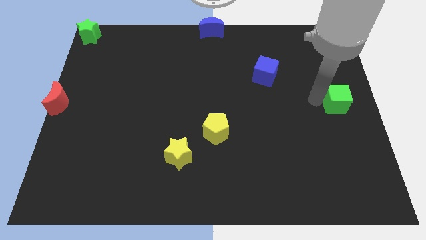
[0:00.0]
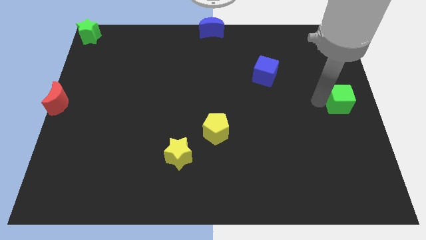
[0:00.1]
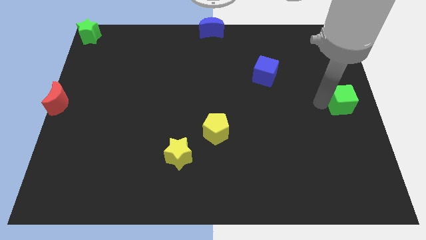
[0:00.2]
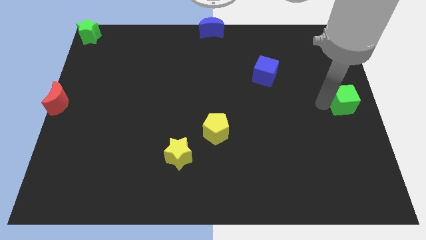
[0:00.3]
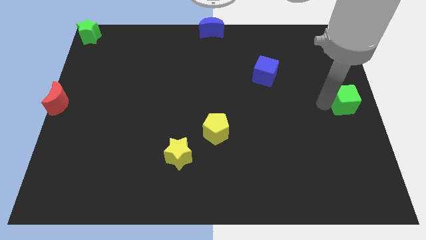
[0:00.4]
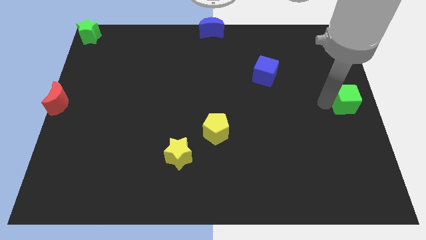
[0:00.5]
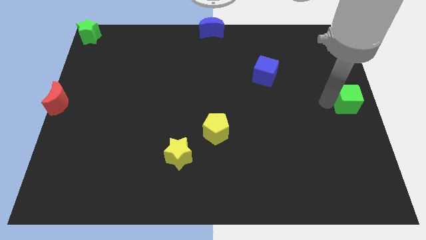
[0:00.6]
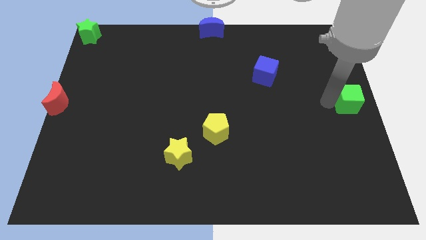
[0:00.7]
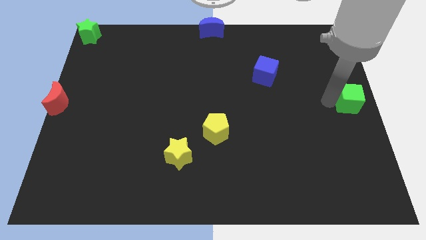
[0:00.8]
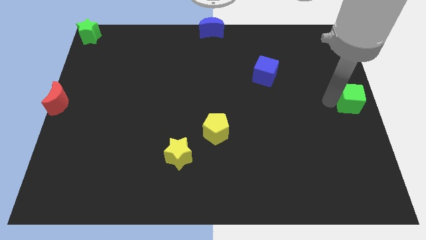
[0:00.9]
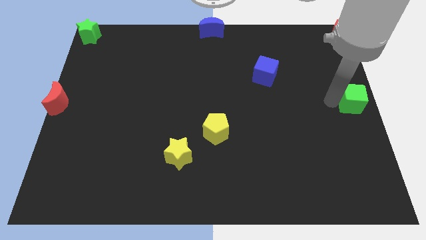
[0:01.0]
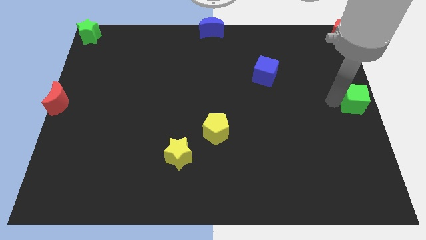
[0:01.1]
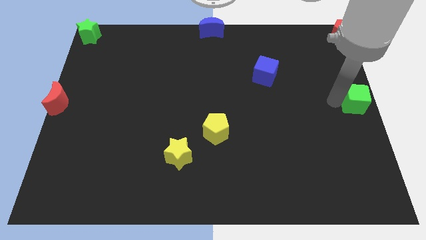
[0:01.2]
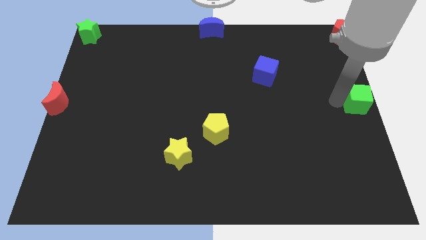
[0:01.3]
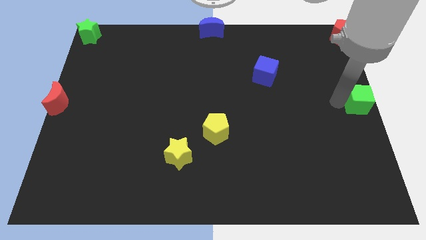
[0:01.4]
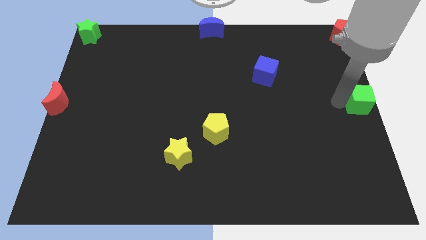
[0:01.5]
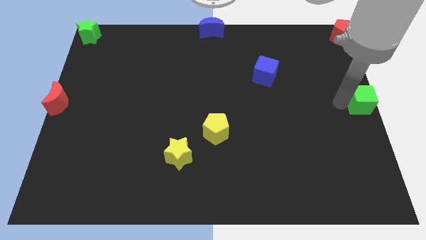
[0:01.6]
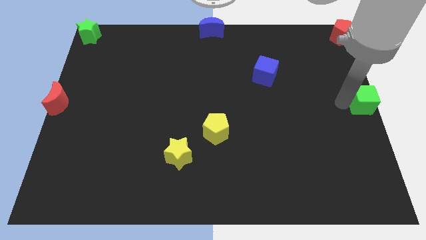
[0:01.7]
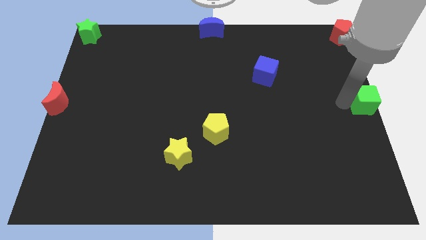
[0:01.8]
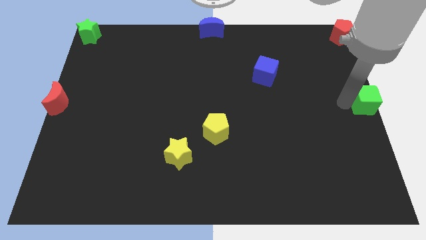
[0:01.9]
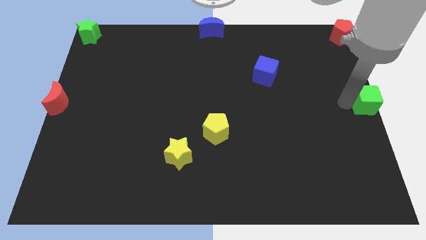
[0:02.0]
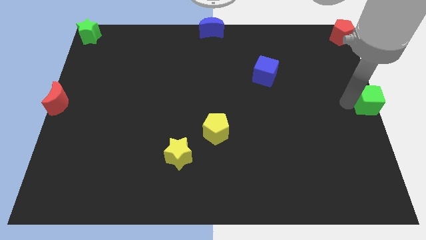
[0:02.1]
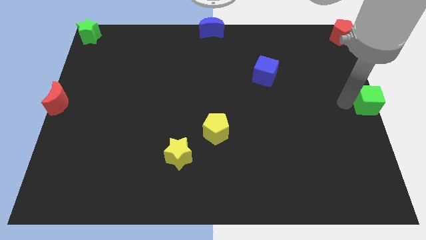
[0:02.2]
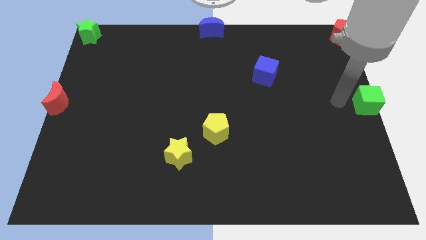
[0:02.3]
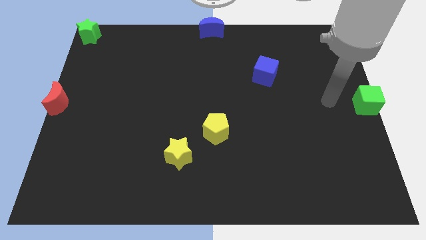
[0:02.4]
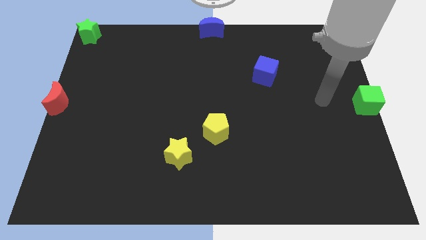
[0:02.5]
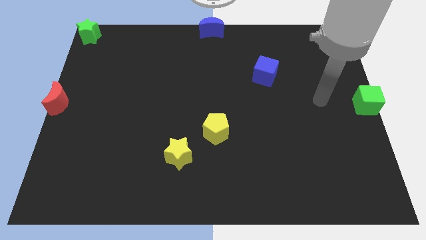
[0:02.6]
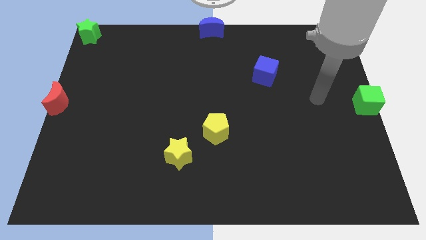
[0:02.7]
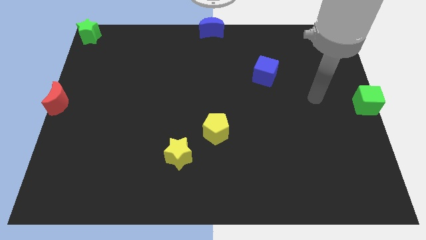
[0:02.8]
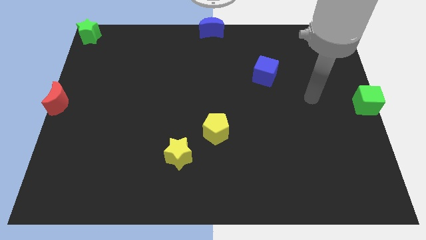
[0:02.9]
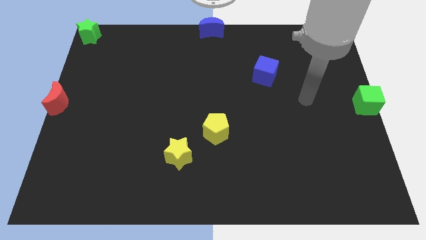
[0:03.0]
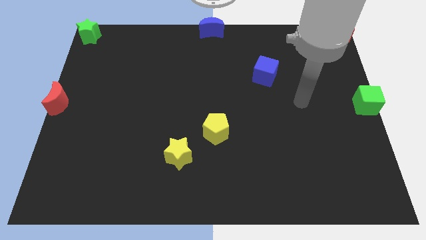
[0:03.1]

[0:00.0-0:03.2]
place the green cube at the right center position

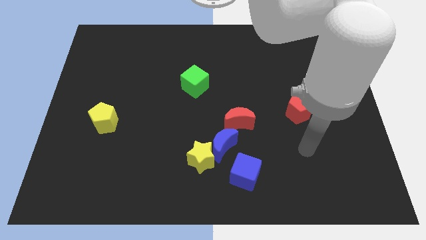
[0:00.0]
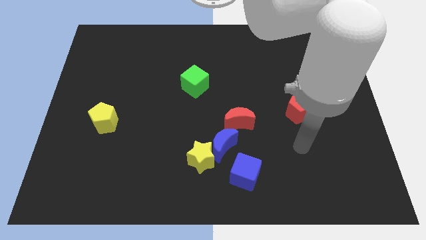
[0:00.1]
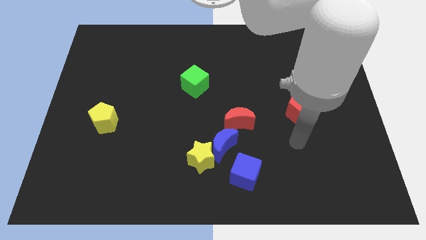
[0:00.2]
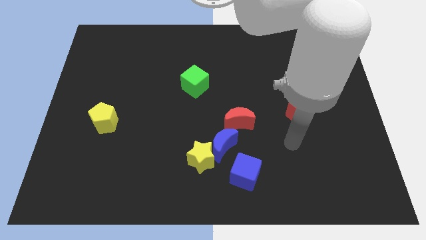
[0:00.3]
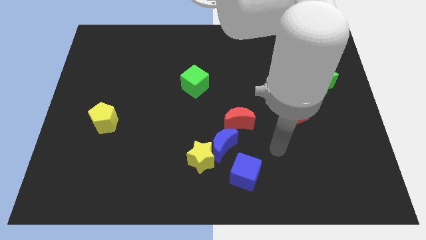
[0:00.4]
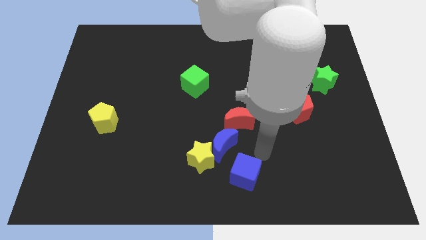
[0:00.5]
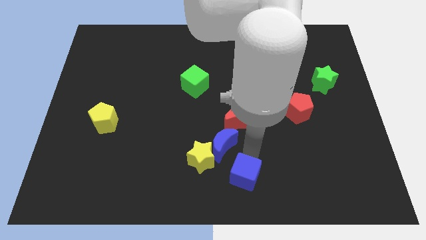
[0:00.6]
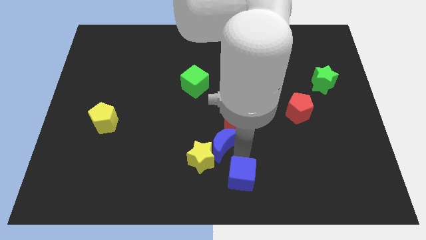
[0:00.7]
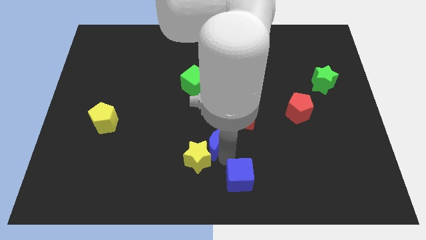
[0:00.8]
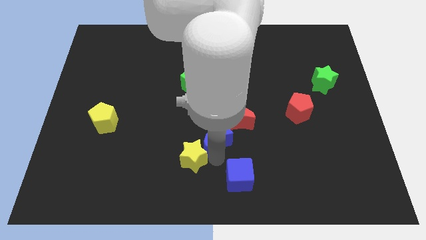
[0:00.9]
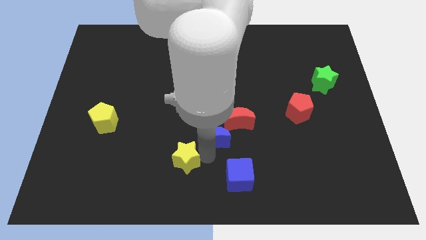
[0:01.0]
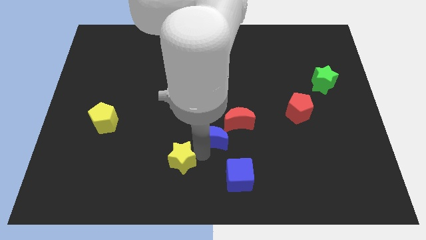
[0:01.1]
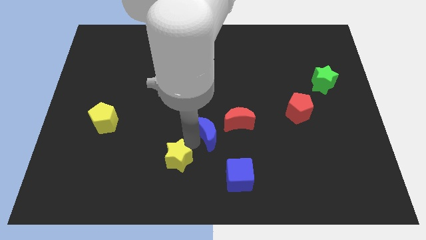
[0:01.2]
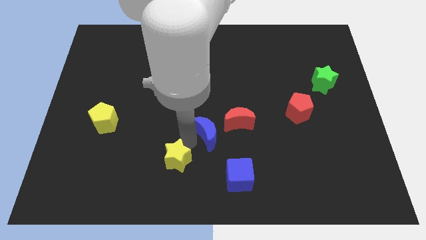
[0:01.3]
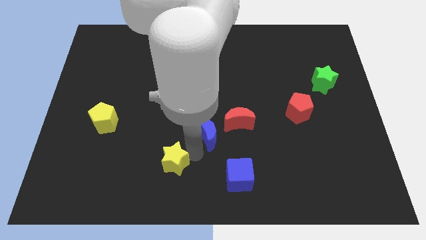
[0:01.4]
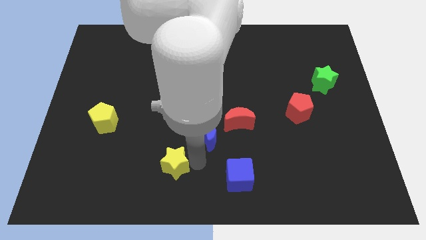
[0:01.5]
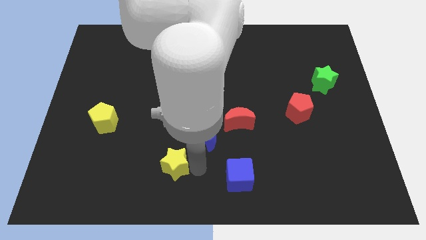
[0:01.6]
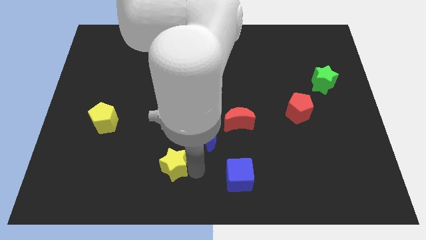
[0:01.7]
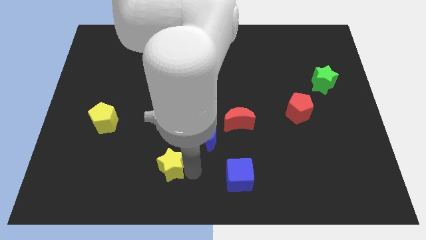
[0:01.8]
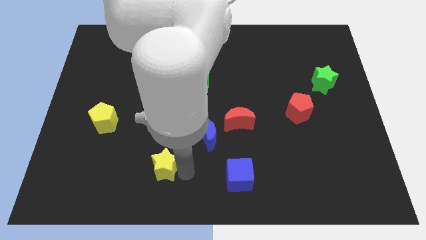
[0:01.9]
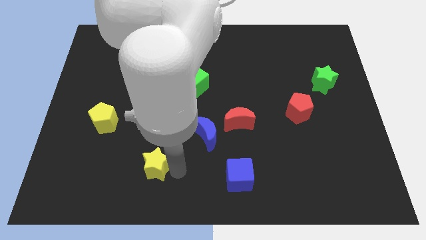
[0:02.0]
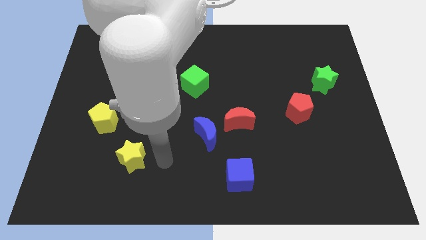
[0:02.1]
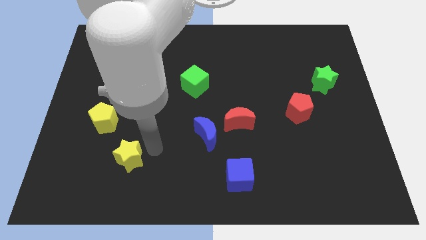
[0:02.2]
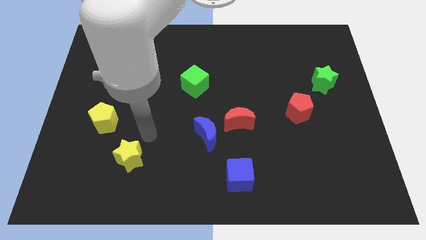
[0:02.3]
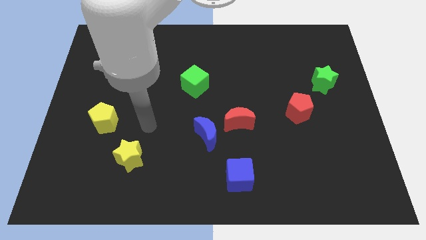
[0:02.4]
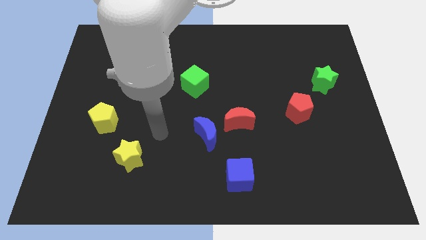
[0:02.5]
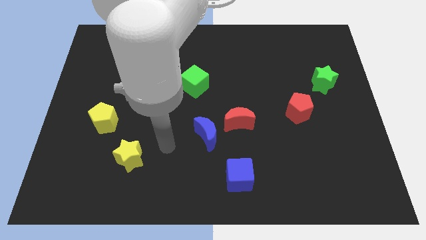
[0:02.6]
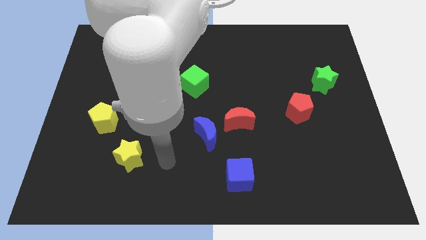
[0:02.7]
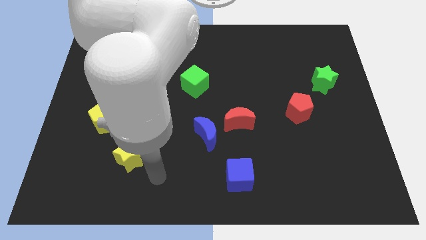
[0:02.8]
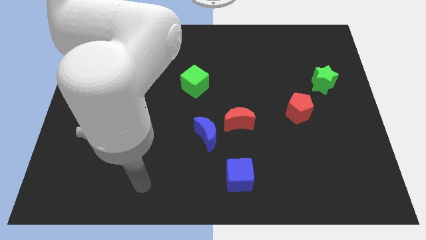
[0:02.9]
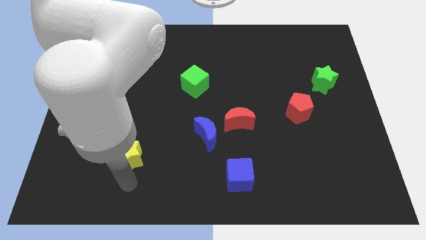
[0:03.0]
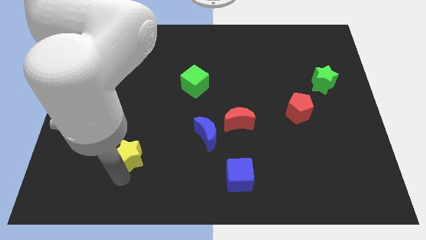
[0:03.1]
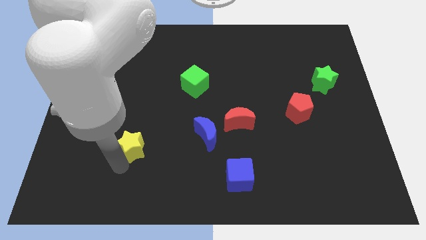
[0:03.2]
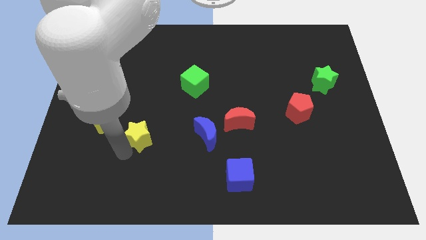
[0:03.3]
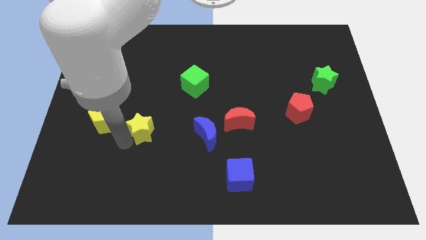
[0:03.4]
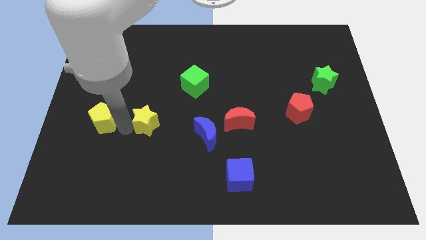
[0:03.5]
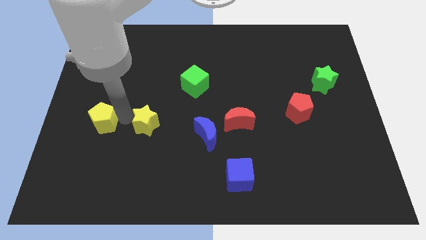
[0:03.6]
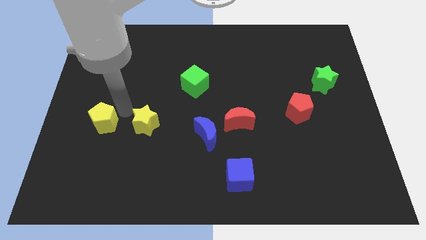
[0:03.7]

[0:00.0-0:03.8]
push the yellow star to the right of the yellow pentagon

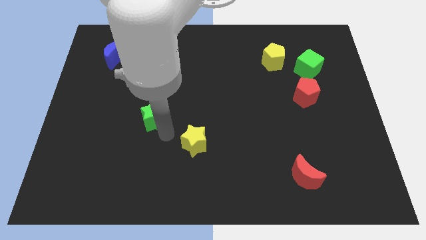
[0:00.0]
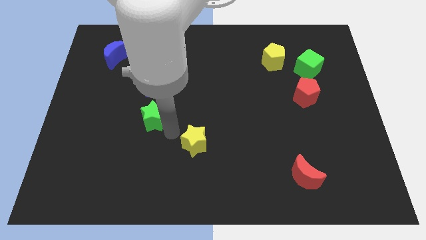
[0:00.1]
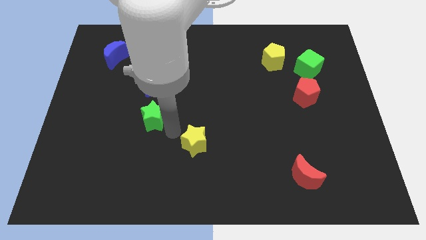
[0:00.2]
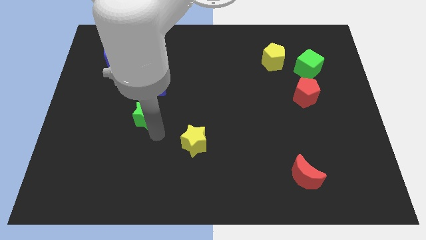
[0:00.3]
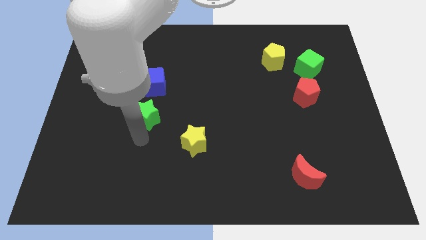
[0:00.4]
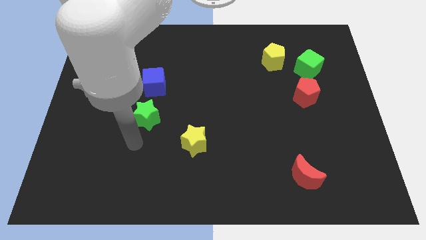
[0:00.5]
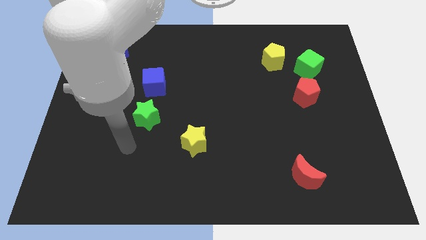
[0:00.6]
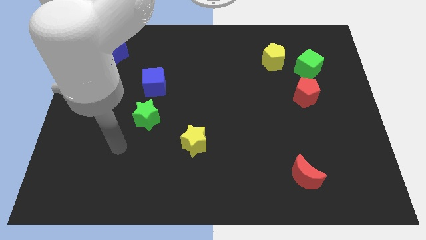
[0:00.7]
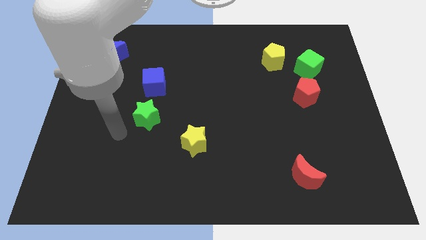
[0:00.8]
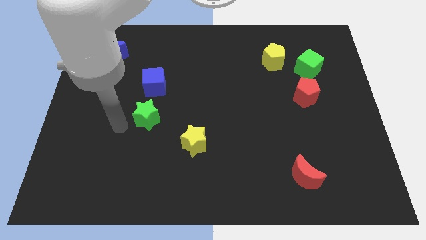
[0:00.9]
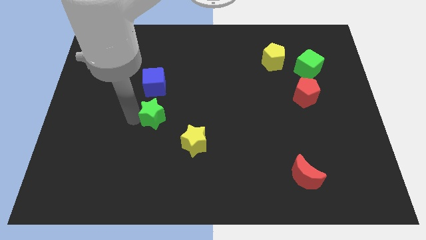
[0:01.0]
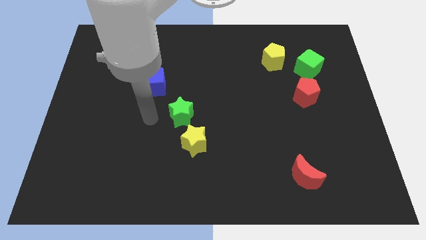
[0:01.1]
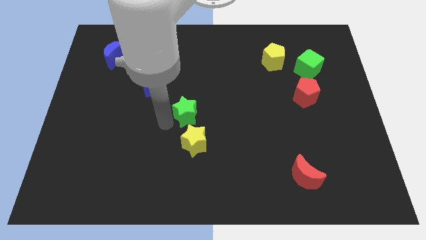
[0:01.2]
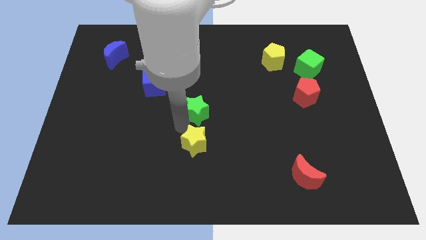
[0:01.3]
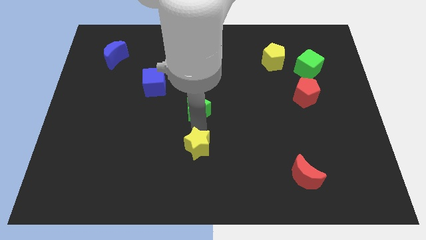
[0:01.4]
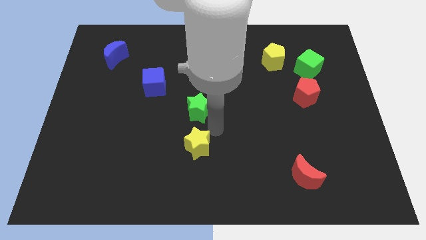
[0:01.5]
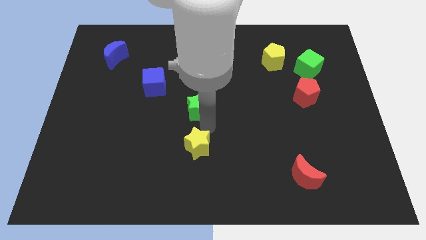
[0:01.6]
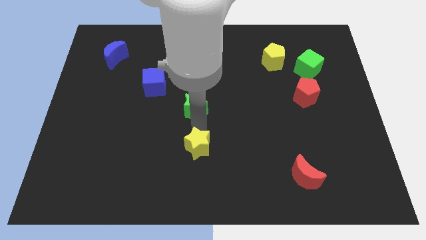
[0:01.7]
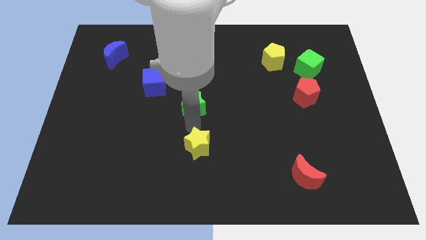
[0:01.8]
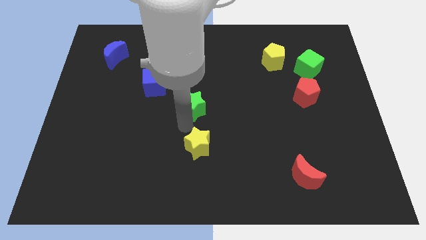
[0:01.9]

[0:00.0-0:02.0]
put the green star at the top of yellow star

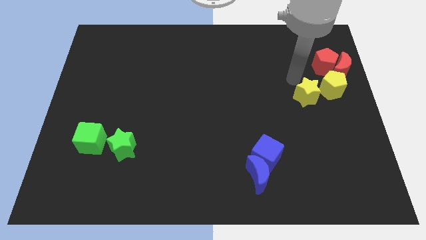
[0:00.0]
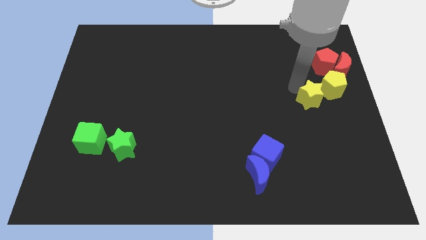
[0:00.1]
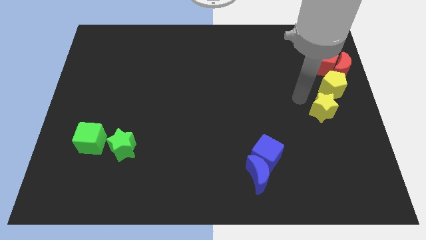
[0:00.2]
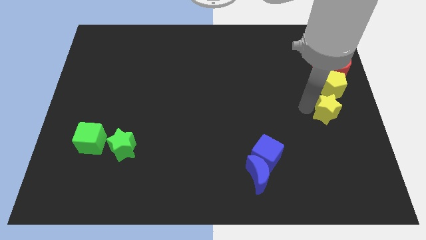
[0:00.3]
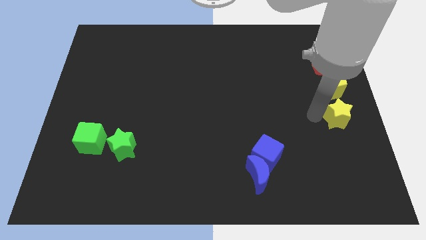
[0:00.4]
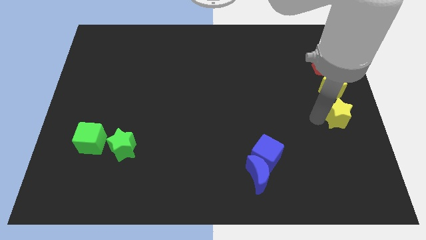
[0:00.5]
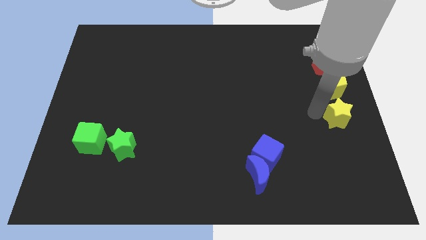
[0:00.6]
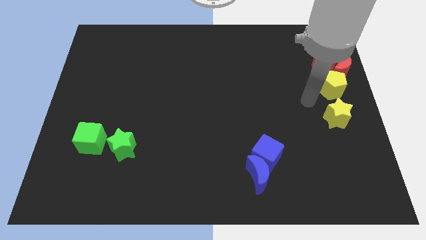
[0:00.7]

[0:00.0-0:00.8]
place the yellow star below the yellow pentagon
